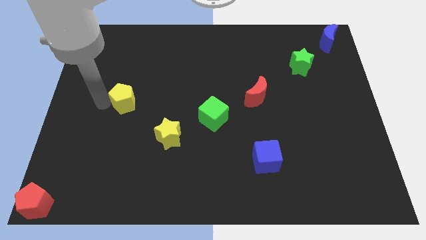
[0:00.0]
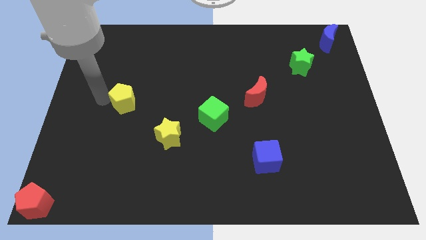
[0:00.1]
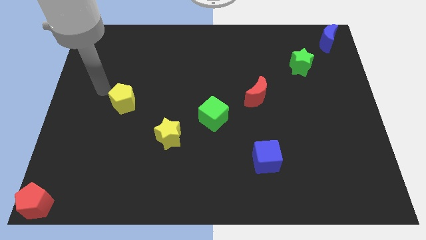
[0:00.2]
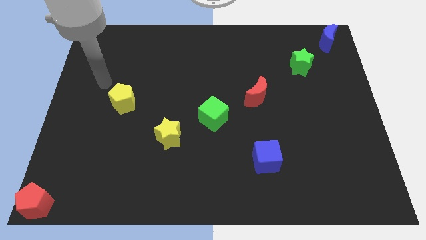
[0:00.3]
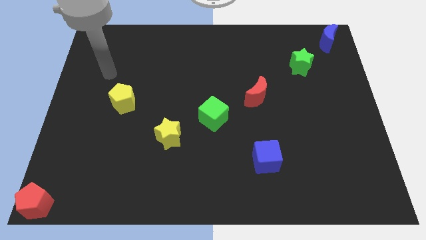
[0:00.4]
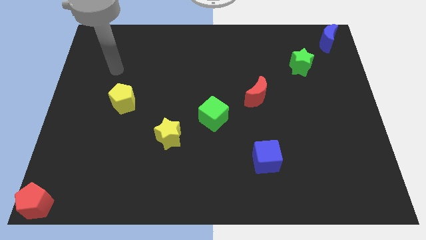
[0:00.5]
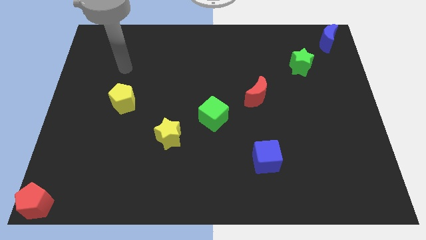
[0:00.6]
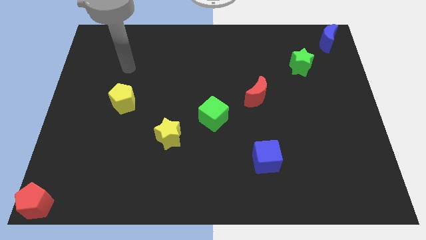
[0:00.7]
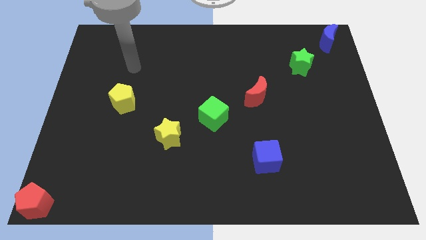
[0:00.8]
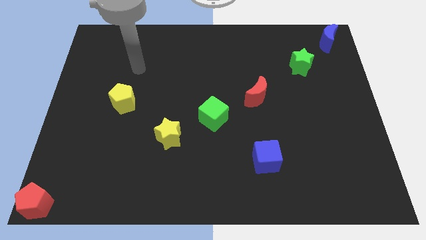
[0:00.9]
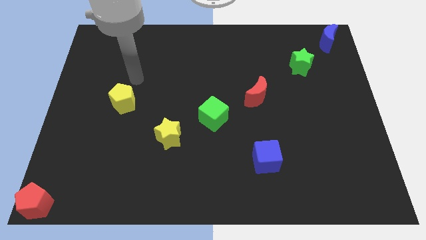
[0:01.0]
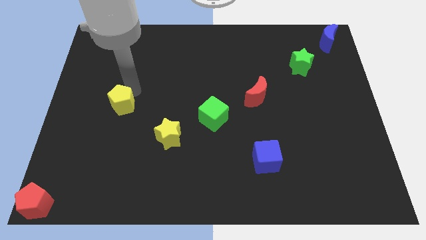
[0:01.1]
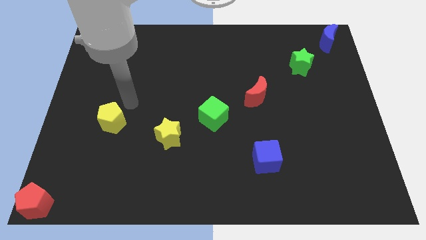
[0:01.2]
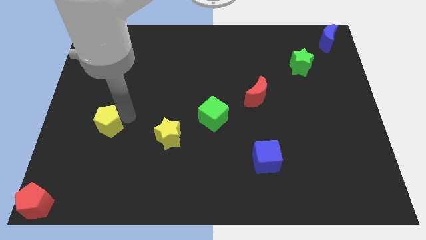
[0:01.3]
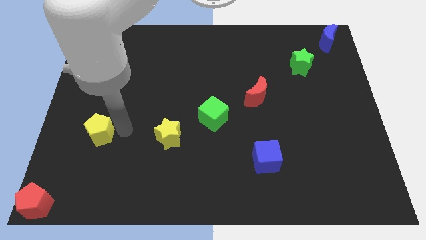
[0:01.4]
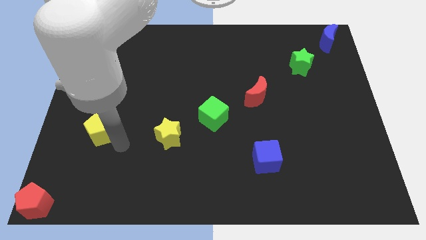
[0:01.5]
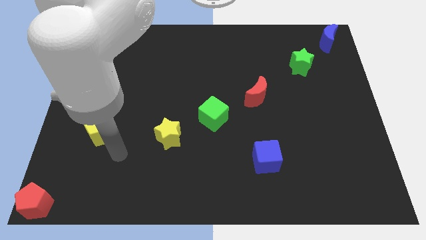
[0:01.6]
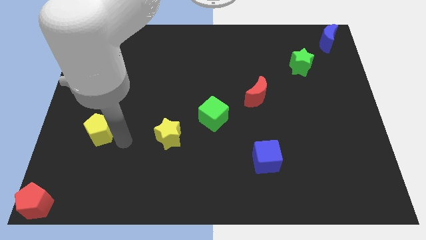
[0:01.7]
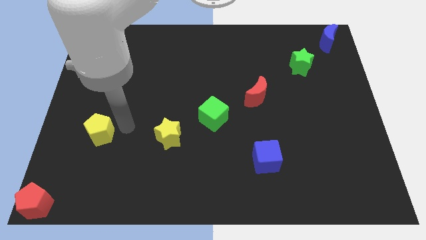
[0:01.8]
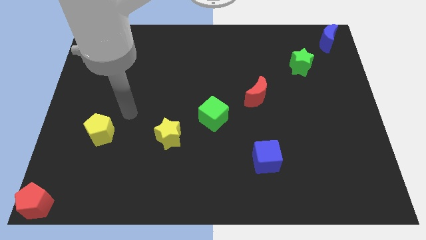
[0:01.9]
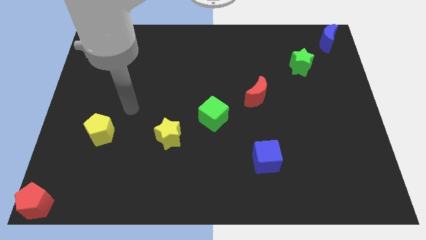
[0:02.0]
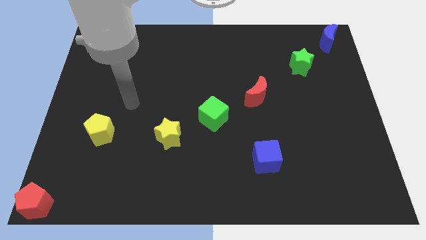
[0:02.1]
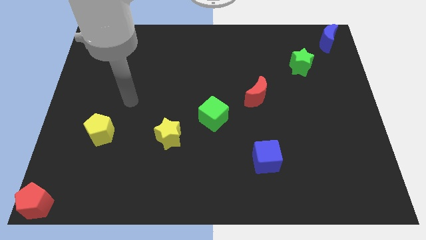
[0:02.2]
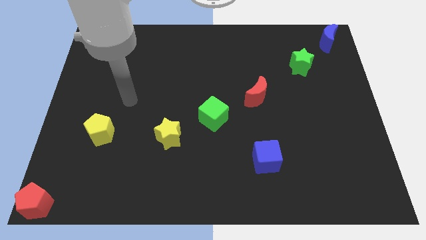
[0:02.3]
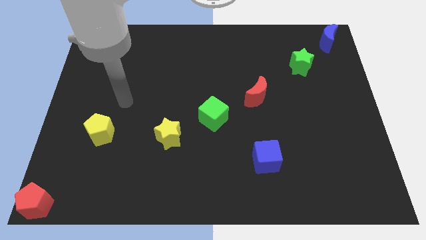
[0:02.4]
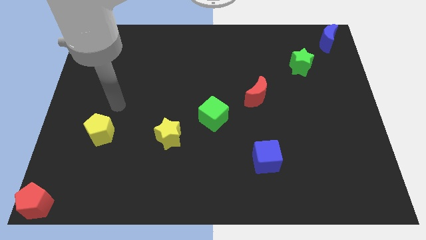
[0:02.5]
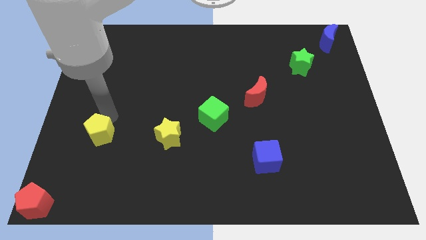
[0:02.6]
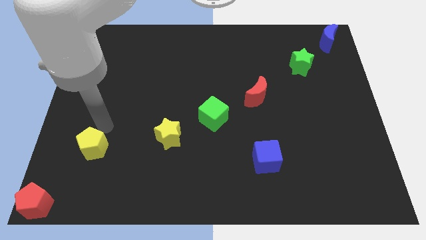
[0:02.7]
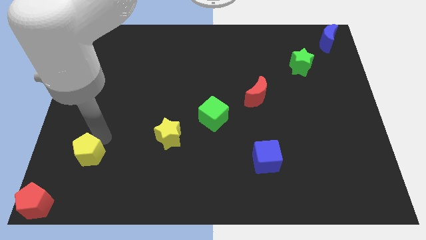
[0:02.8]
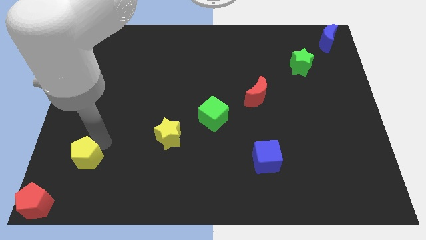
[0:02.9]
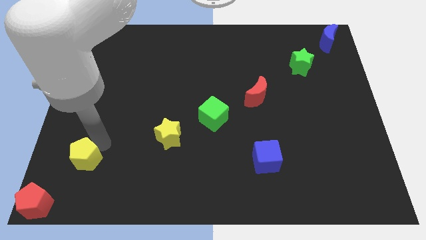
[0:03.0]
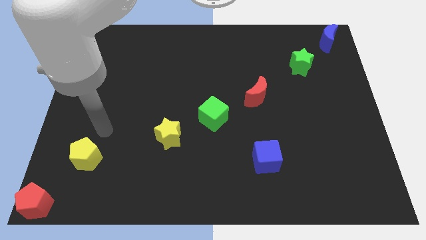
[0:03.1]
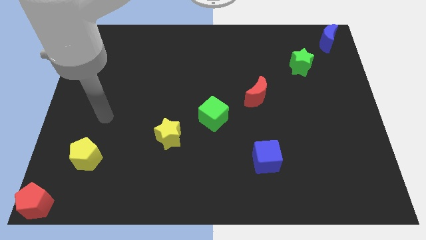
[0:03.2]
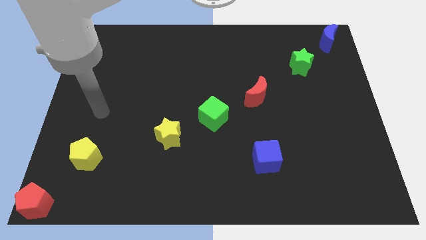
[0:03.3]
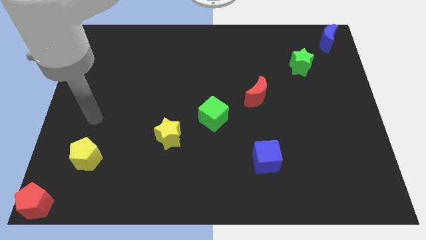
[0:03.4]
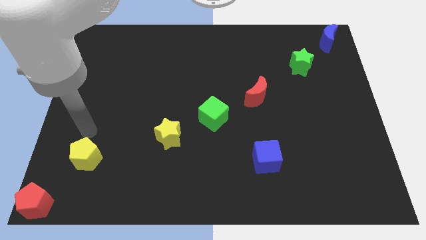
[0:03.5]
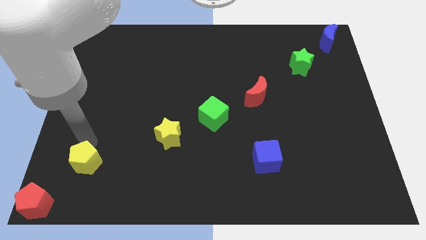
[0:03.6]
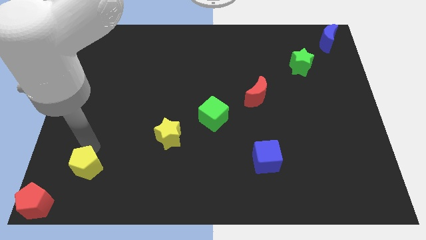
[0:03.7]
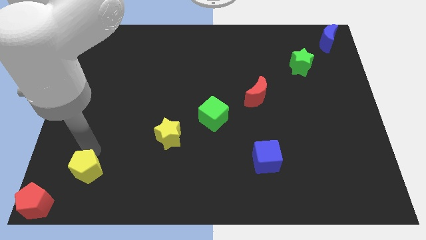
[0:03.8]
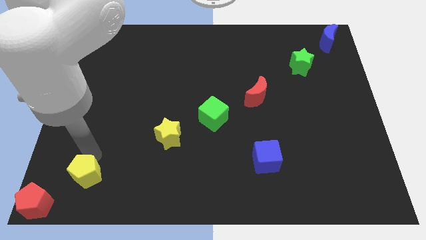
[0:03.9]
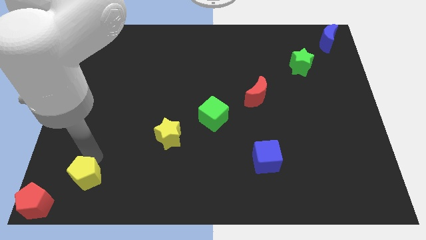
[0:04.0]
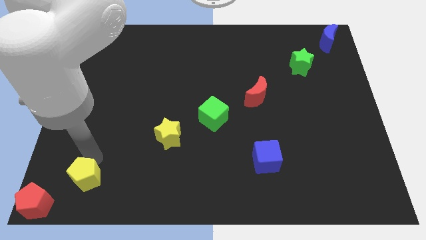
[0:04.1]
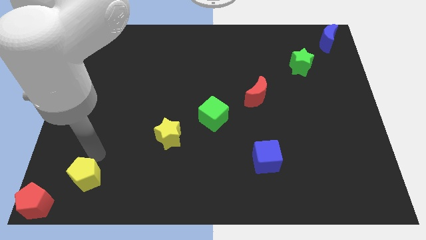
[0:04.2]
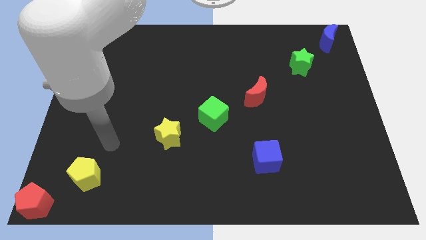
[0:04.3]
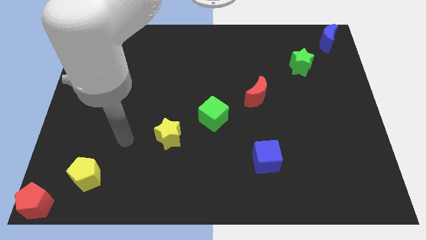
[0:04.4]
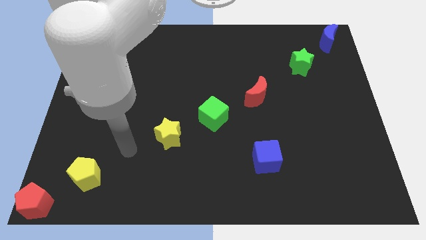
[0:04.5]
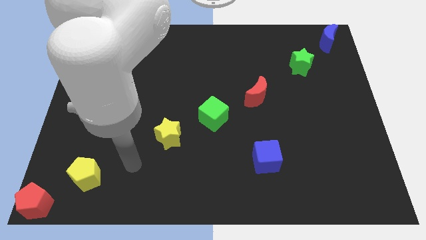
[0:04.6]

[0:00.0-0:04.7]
move the yellow pentagon in between yellow star and the red pentagon to form a diagonal line

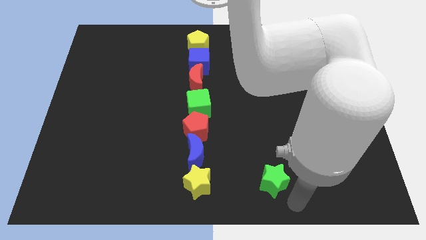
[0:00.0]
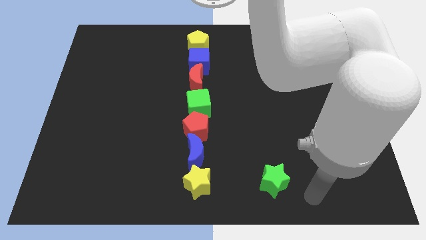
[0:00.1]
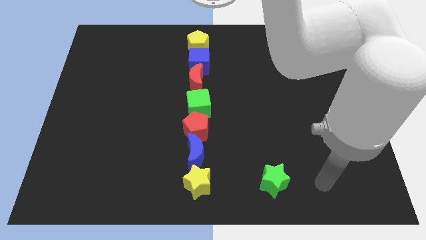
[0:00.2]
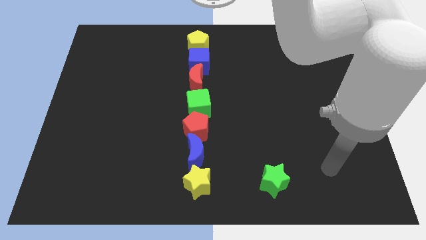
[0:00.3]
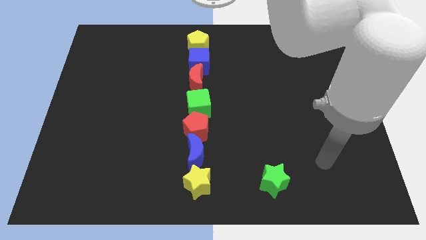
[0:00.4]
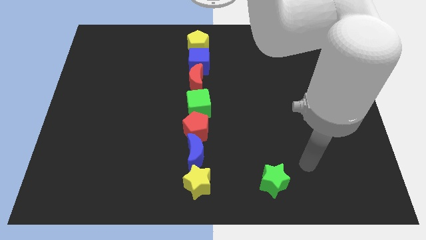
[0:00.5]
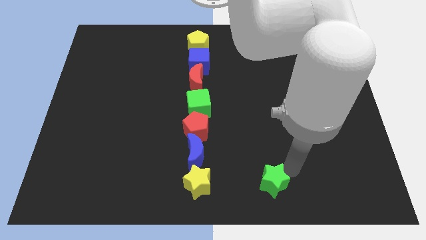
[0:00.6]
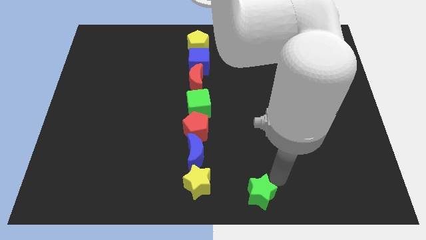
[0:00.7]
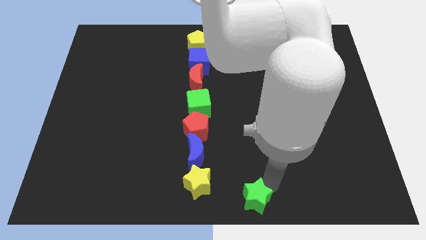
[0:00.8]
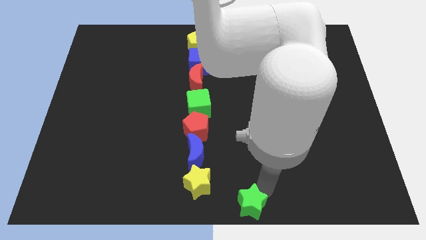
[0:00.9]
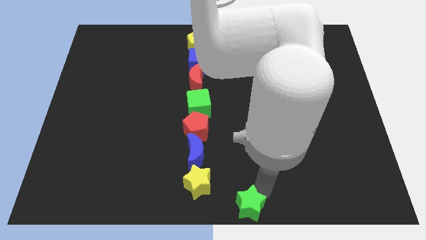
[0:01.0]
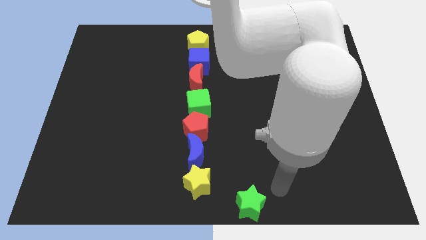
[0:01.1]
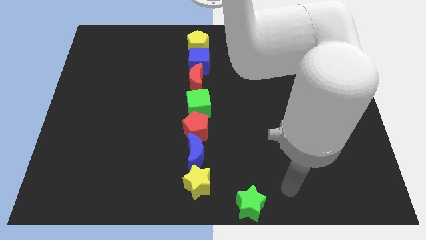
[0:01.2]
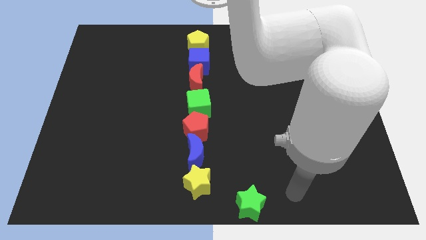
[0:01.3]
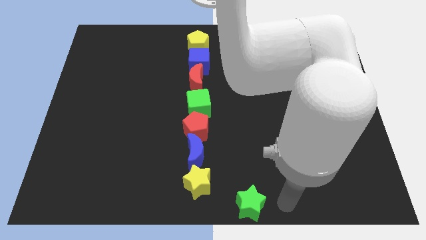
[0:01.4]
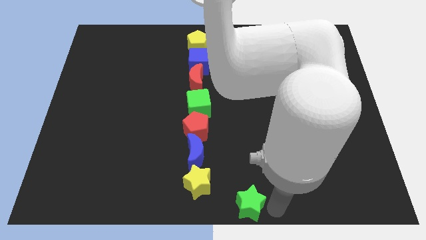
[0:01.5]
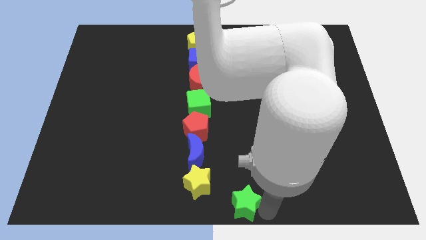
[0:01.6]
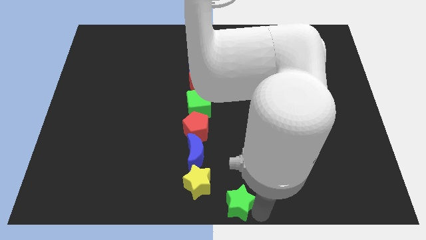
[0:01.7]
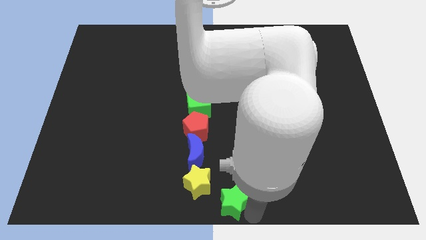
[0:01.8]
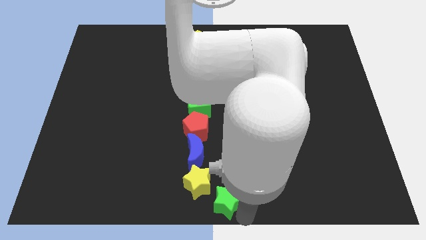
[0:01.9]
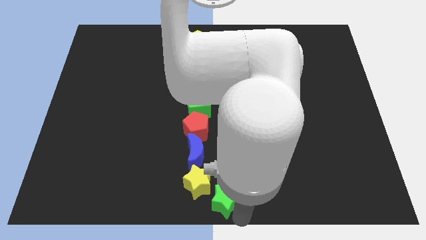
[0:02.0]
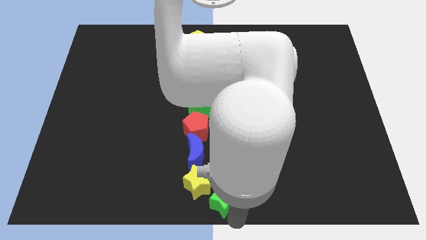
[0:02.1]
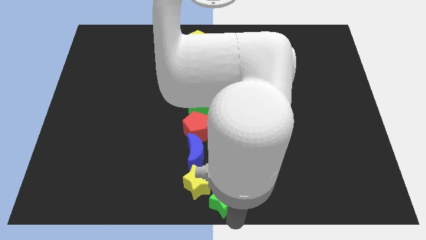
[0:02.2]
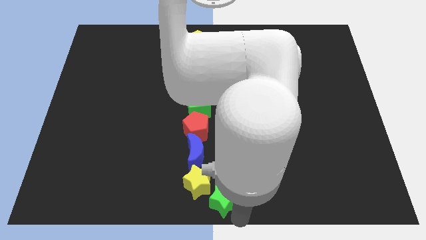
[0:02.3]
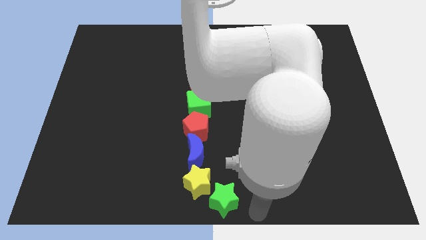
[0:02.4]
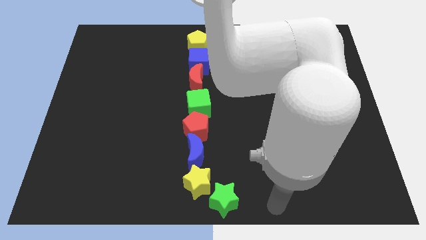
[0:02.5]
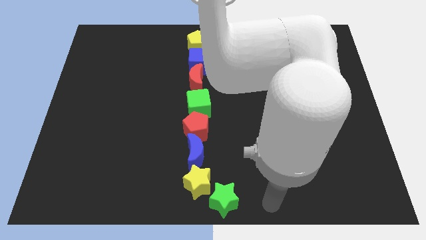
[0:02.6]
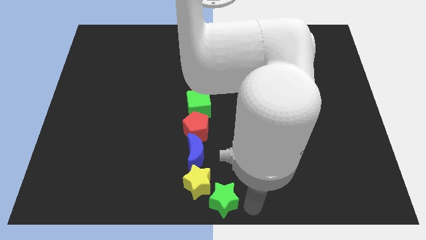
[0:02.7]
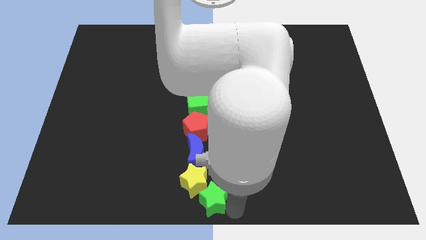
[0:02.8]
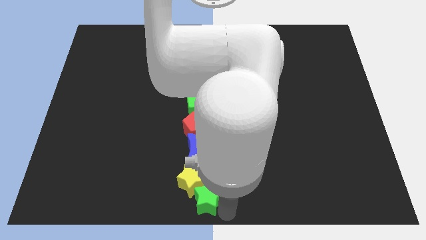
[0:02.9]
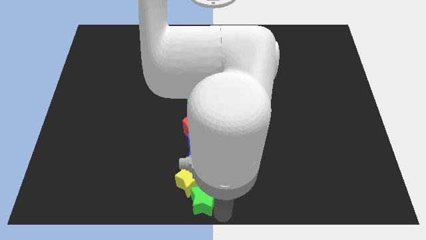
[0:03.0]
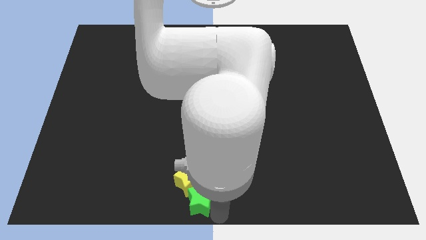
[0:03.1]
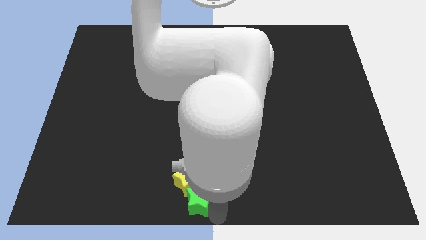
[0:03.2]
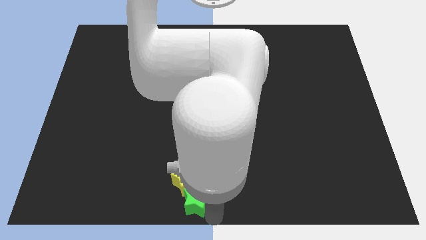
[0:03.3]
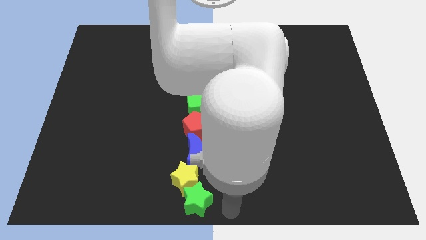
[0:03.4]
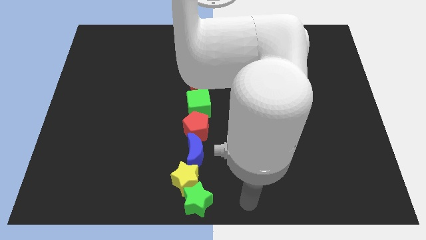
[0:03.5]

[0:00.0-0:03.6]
place the green star at the bottom center

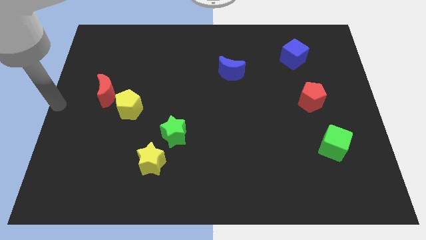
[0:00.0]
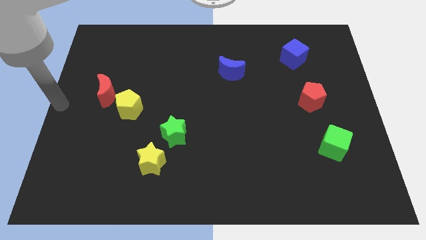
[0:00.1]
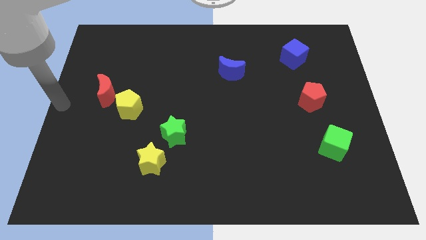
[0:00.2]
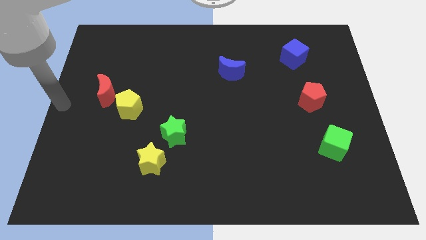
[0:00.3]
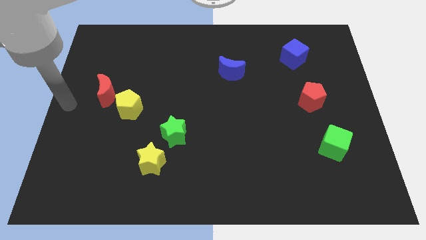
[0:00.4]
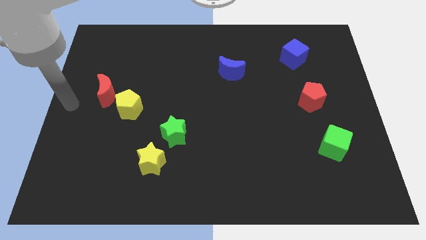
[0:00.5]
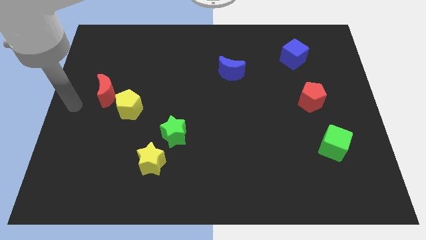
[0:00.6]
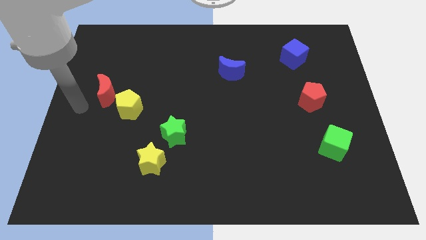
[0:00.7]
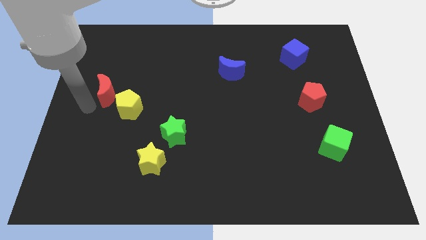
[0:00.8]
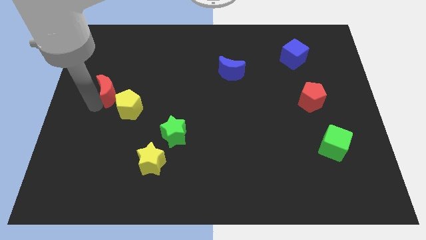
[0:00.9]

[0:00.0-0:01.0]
place your arm towards the left side red crescent
